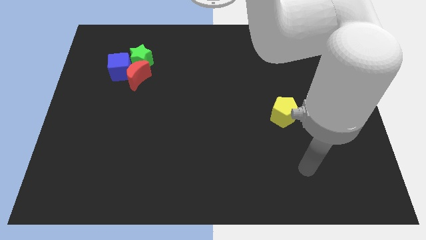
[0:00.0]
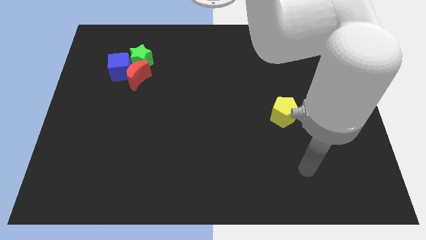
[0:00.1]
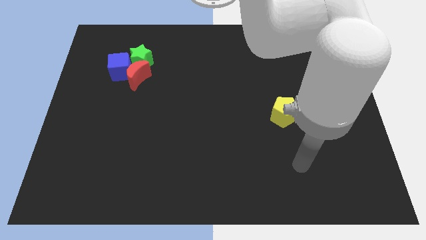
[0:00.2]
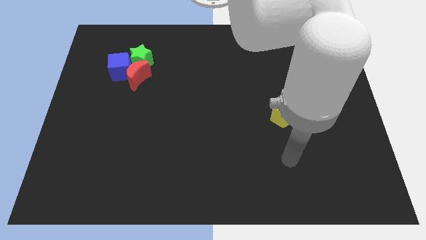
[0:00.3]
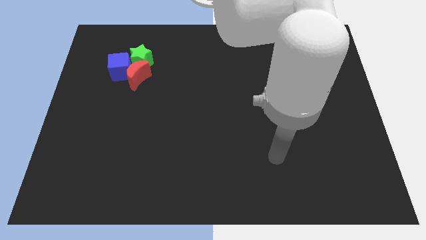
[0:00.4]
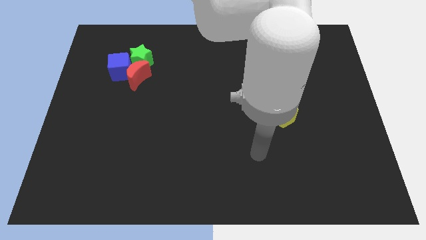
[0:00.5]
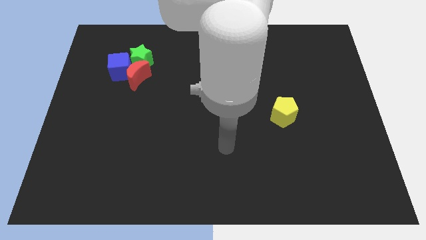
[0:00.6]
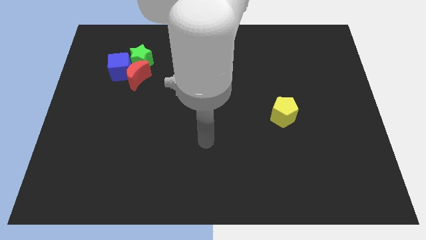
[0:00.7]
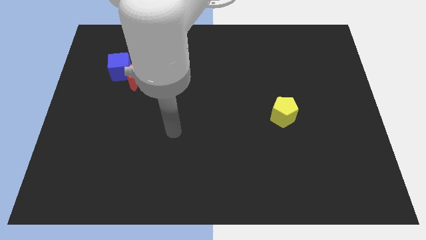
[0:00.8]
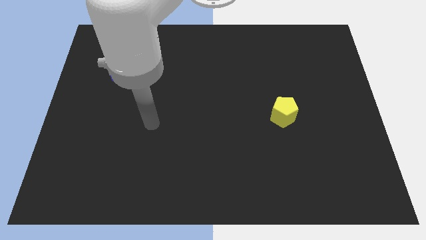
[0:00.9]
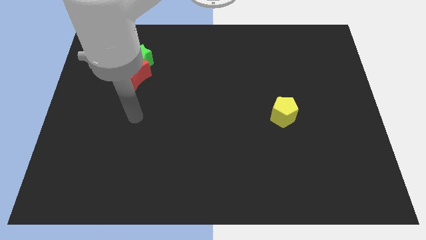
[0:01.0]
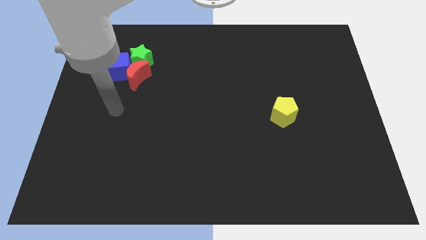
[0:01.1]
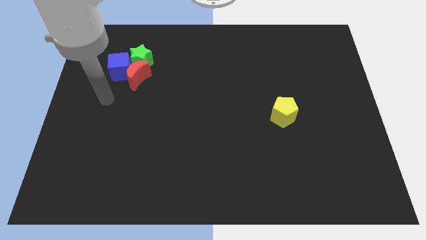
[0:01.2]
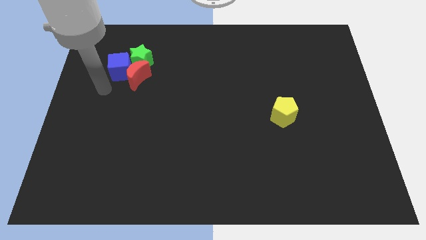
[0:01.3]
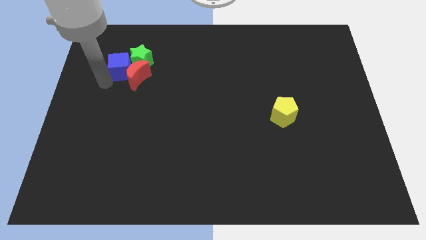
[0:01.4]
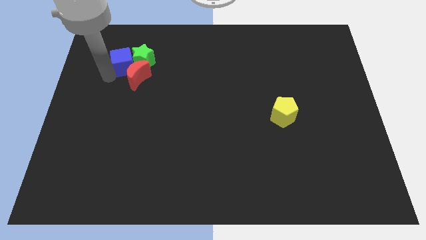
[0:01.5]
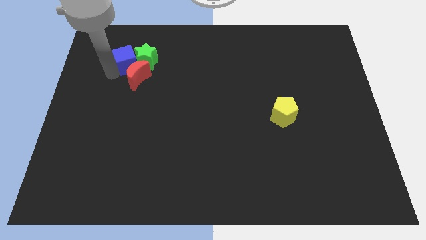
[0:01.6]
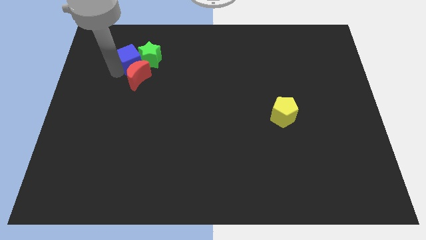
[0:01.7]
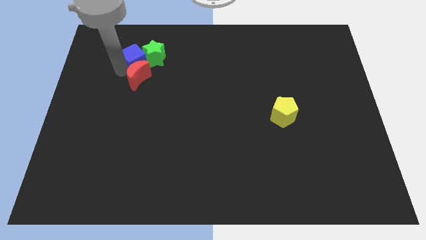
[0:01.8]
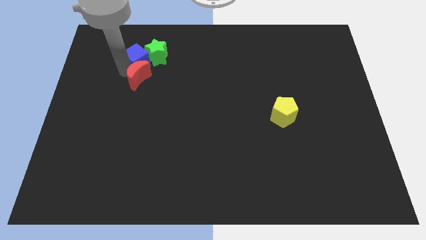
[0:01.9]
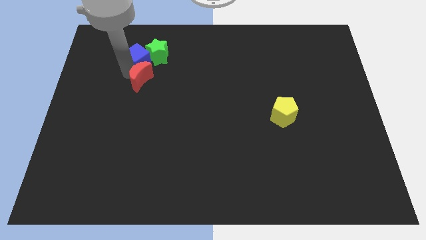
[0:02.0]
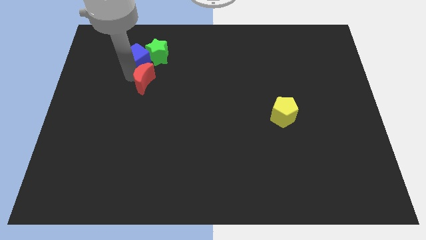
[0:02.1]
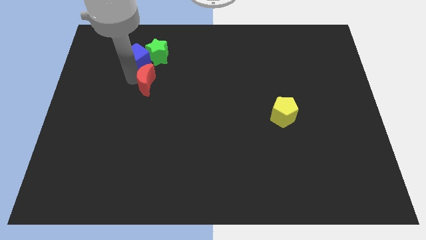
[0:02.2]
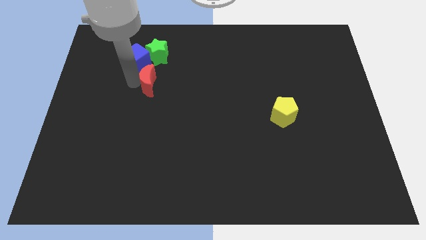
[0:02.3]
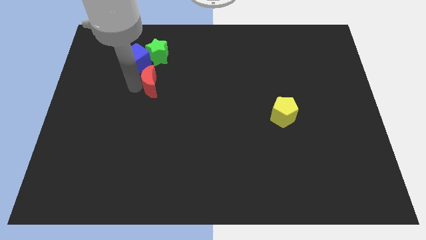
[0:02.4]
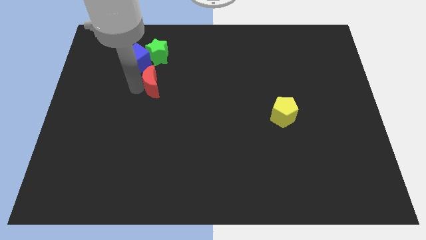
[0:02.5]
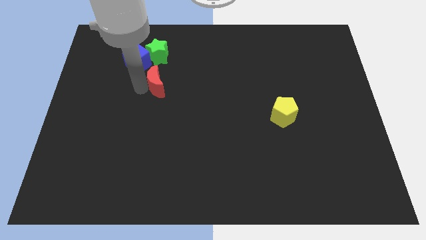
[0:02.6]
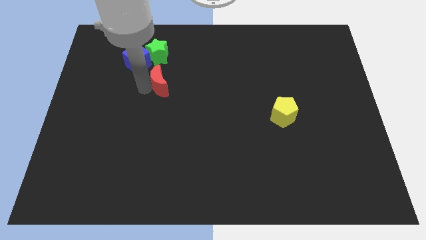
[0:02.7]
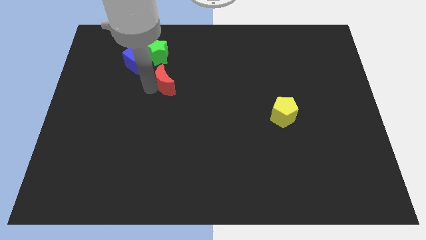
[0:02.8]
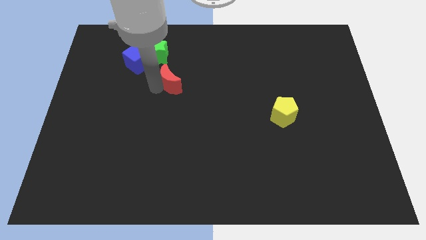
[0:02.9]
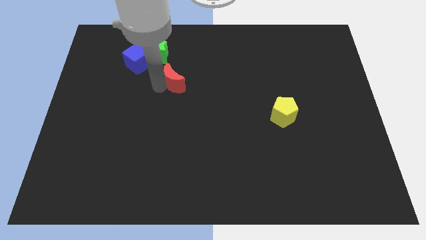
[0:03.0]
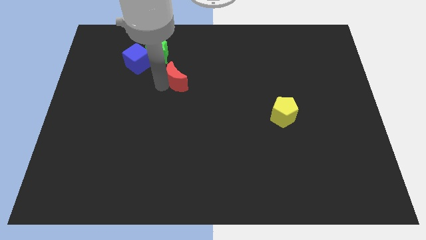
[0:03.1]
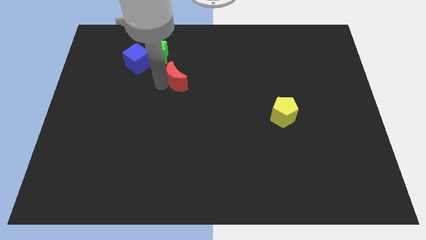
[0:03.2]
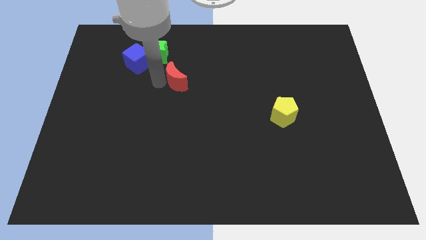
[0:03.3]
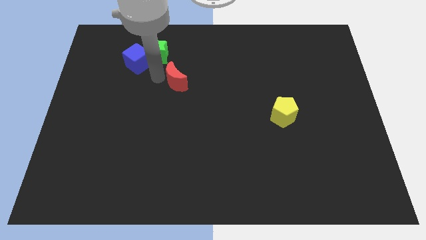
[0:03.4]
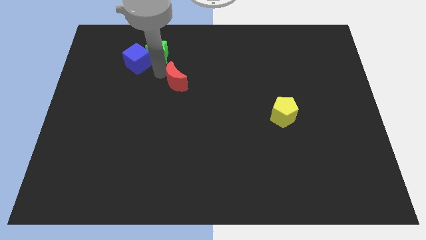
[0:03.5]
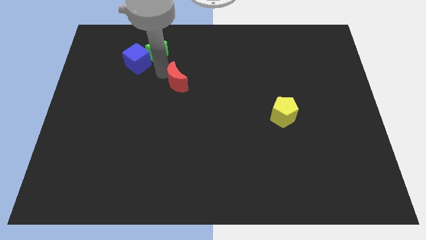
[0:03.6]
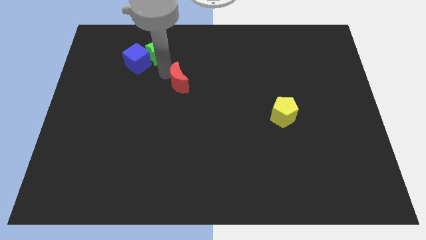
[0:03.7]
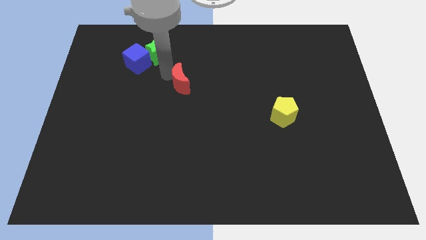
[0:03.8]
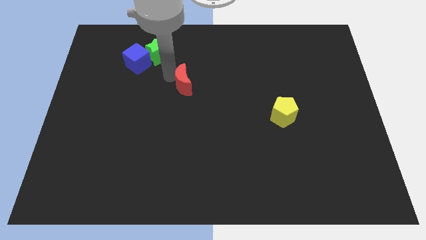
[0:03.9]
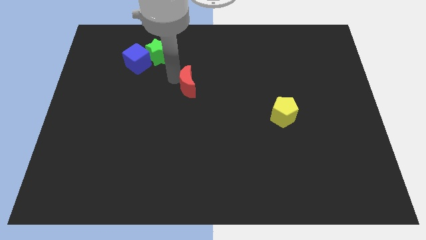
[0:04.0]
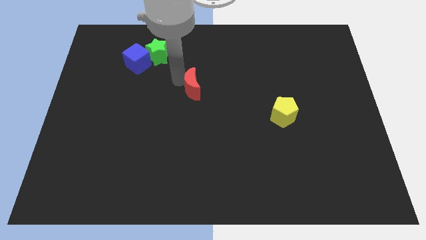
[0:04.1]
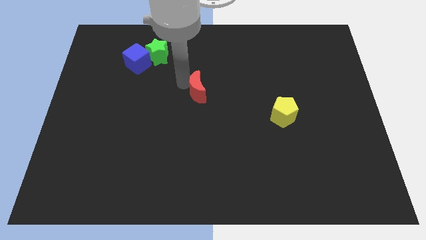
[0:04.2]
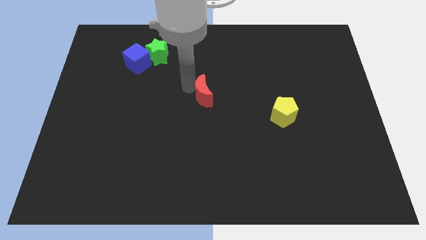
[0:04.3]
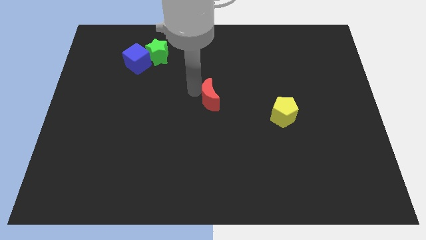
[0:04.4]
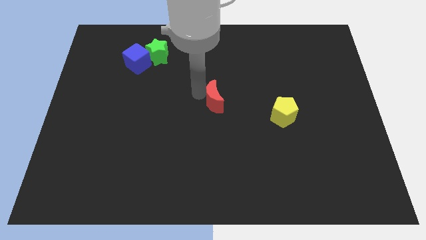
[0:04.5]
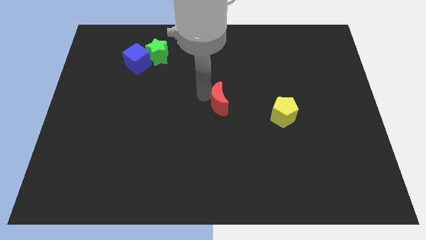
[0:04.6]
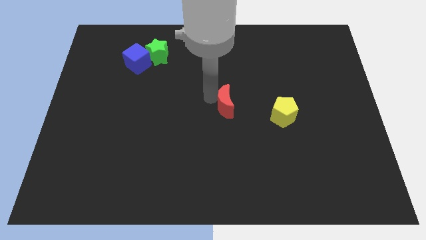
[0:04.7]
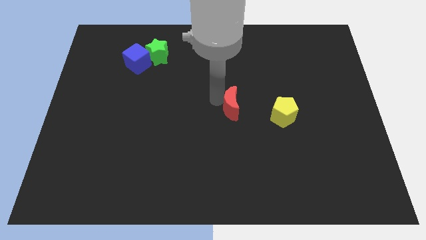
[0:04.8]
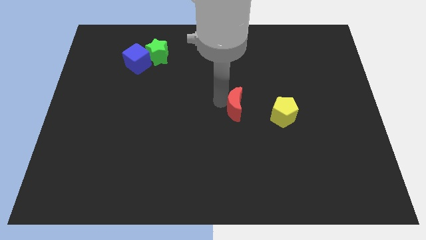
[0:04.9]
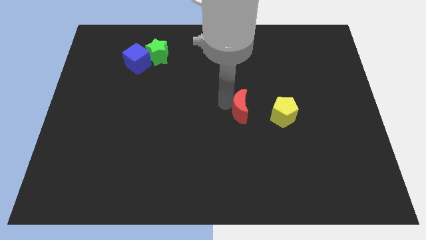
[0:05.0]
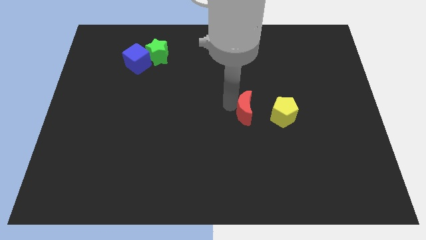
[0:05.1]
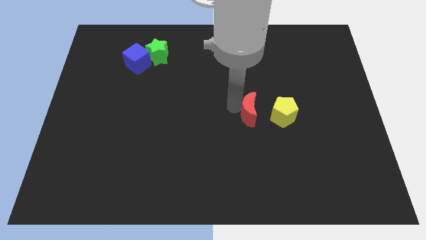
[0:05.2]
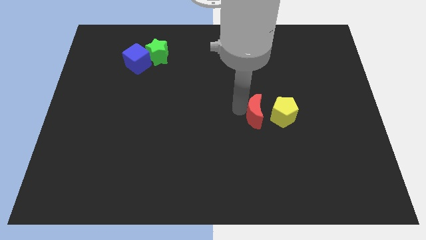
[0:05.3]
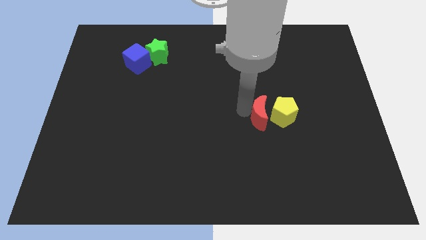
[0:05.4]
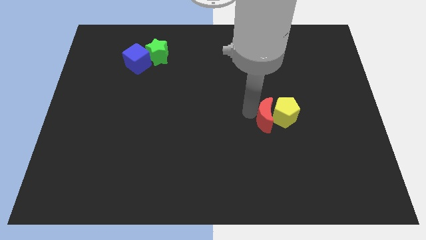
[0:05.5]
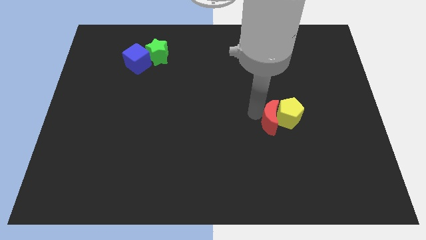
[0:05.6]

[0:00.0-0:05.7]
slide the moon close to the pentagon

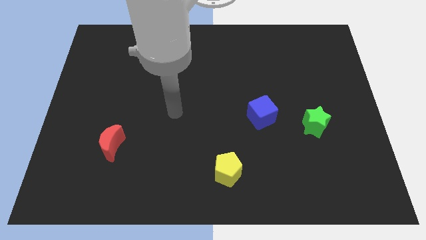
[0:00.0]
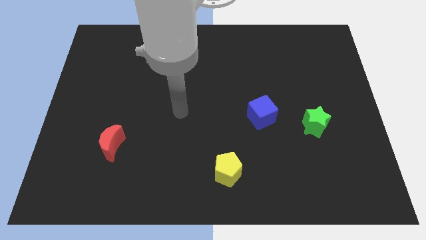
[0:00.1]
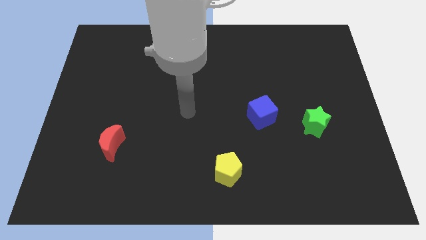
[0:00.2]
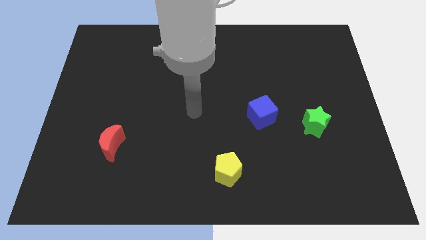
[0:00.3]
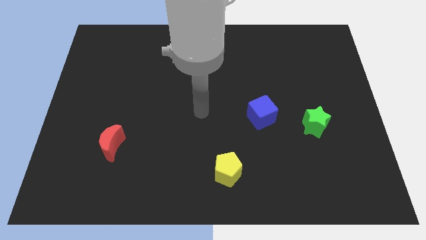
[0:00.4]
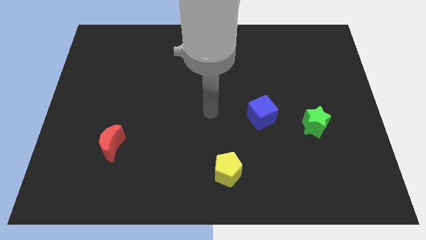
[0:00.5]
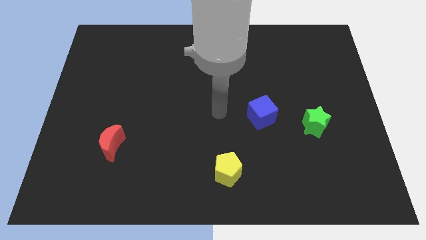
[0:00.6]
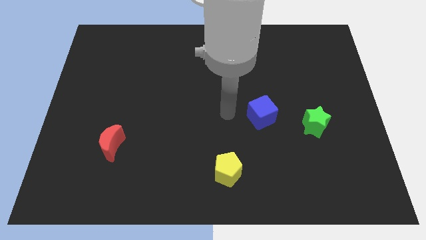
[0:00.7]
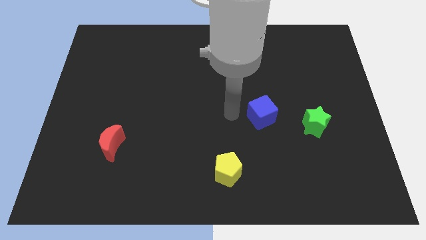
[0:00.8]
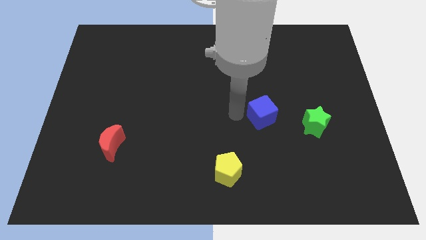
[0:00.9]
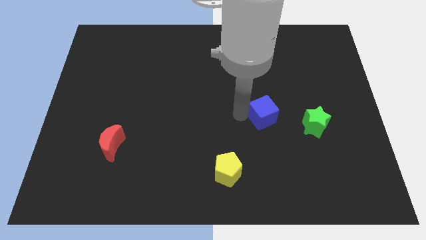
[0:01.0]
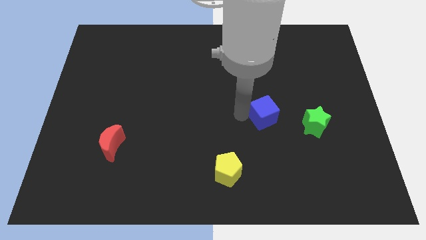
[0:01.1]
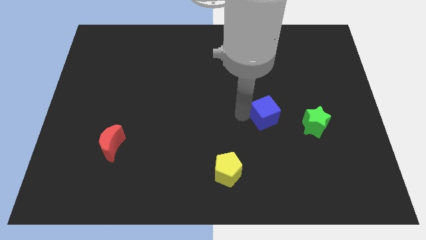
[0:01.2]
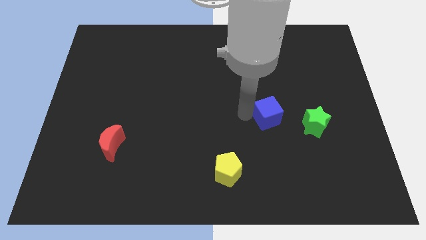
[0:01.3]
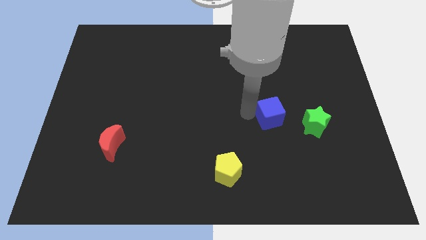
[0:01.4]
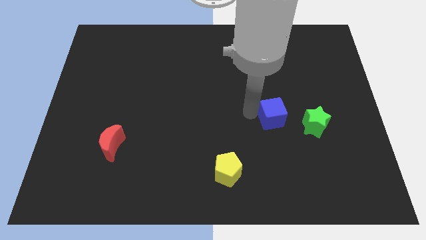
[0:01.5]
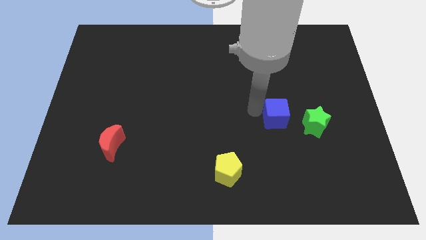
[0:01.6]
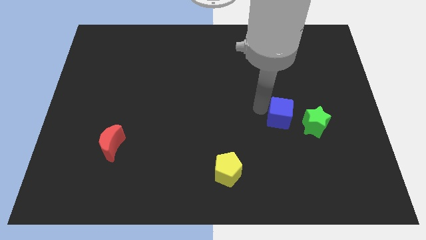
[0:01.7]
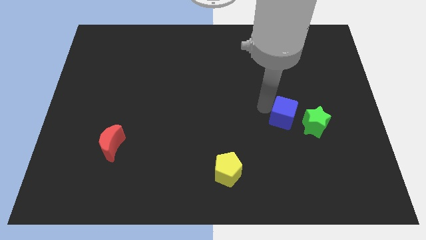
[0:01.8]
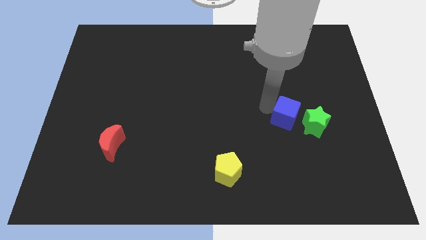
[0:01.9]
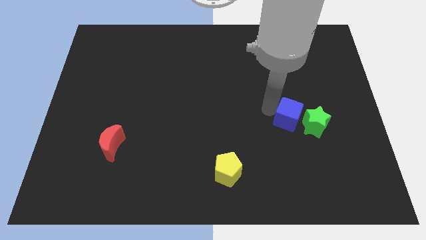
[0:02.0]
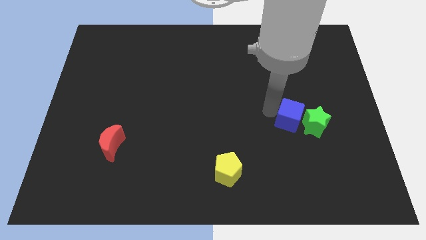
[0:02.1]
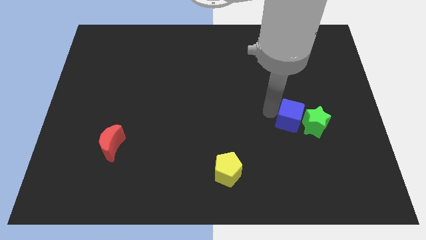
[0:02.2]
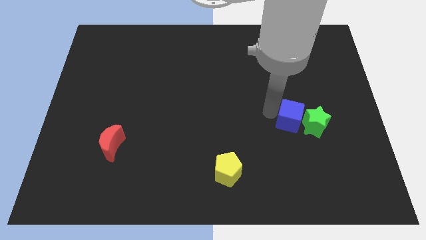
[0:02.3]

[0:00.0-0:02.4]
move the blue block to the green star
